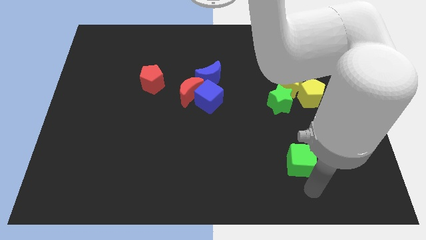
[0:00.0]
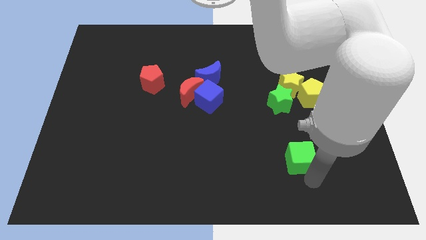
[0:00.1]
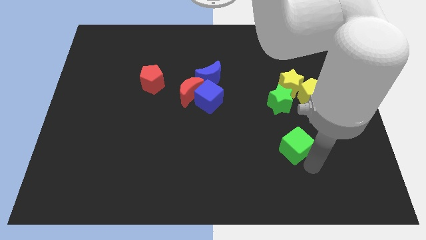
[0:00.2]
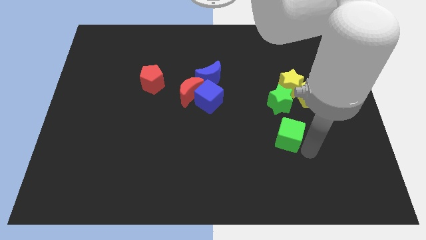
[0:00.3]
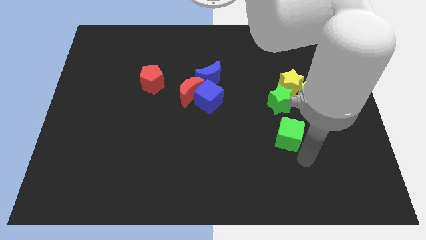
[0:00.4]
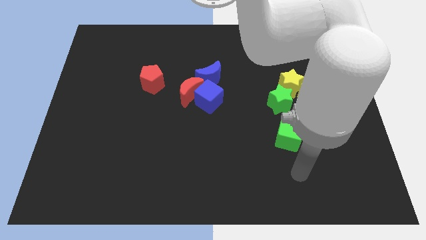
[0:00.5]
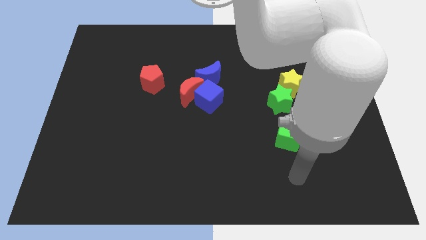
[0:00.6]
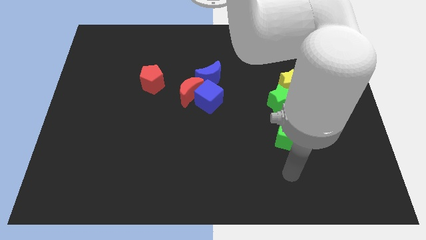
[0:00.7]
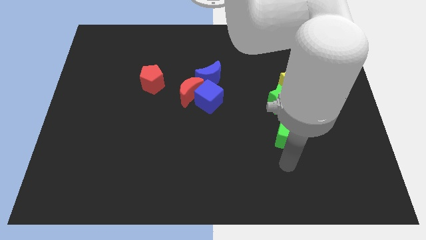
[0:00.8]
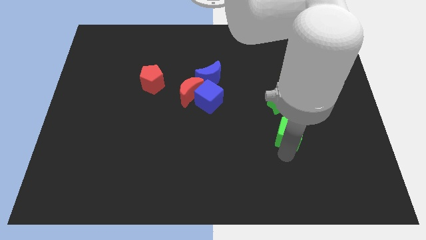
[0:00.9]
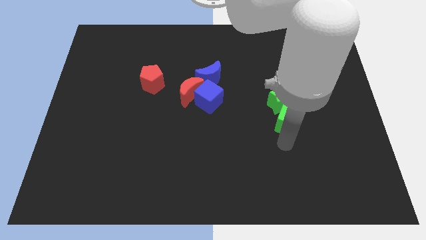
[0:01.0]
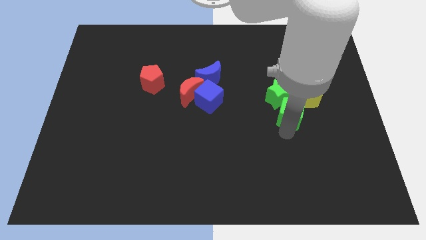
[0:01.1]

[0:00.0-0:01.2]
drag the green cube into the green star

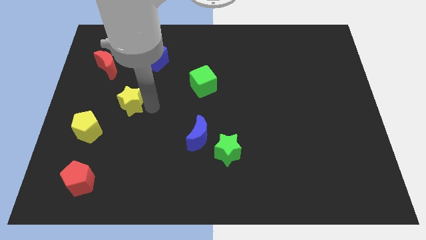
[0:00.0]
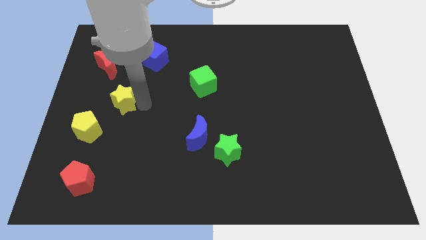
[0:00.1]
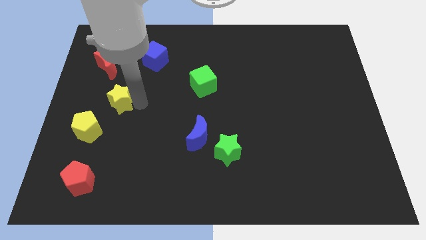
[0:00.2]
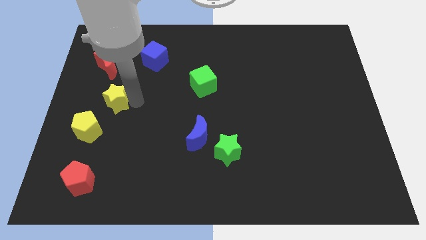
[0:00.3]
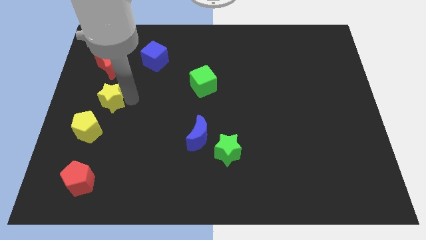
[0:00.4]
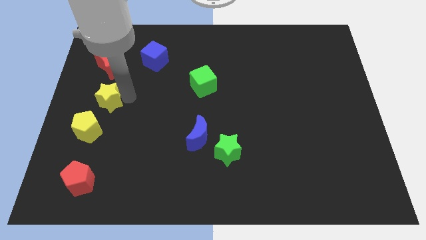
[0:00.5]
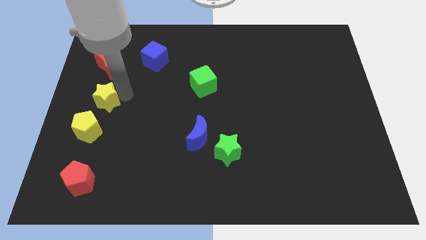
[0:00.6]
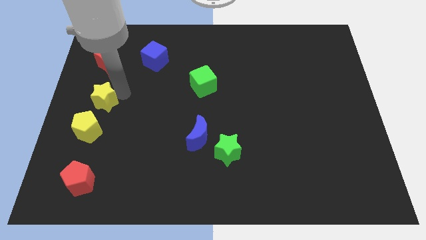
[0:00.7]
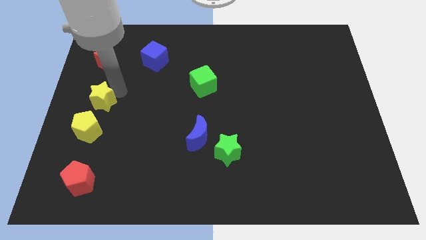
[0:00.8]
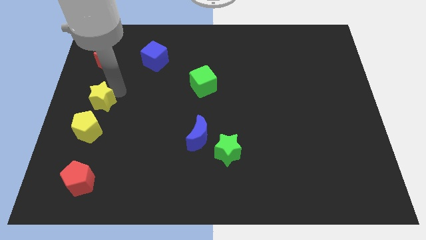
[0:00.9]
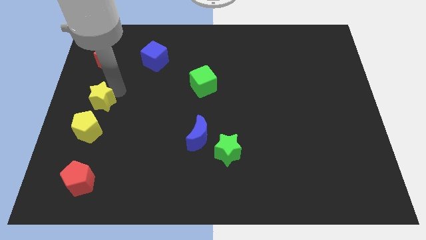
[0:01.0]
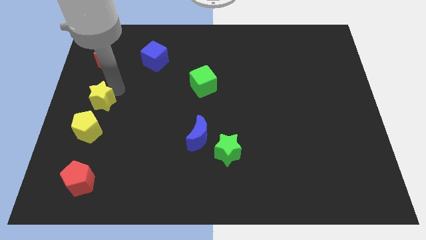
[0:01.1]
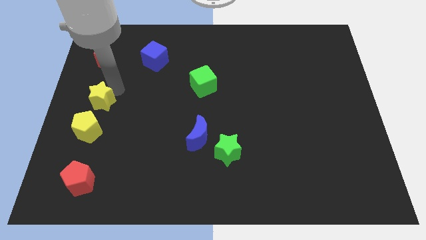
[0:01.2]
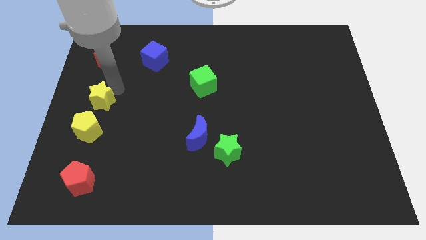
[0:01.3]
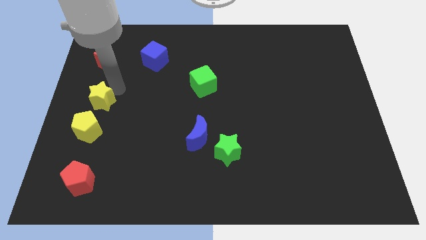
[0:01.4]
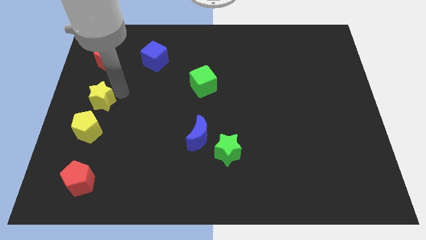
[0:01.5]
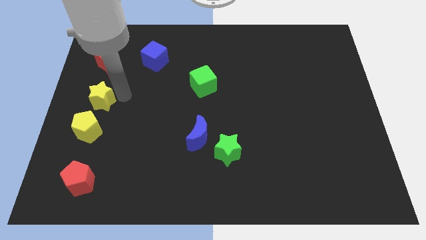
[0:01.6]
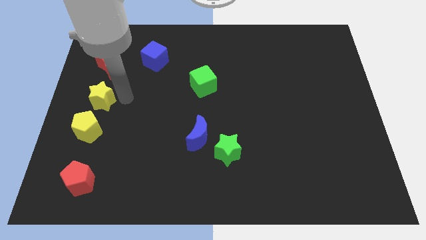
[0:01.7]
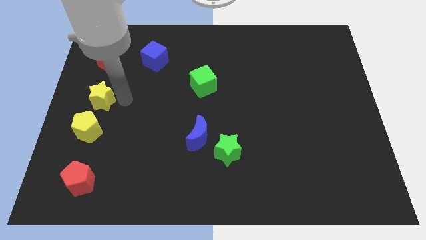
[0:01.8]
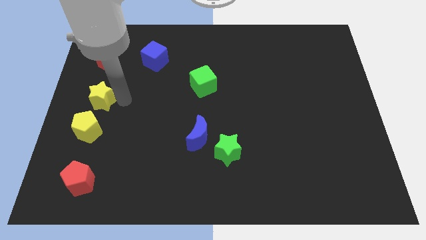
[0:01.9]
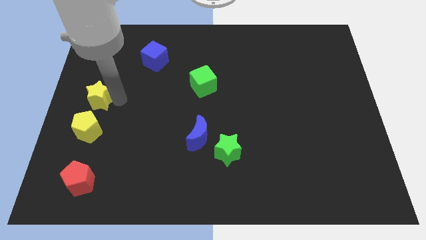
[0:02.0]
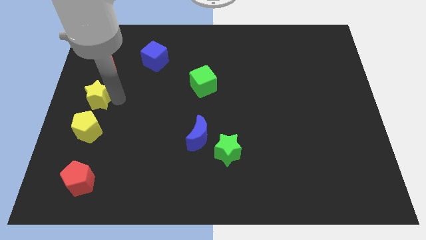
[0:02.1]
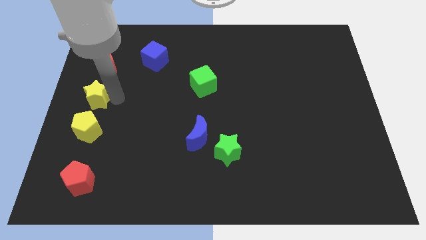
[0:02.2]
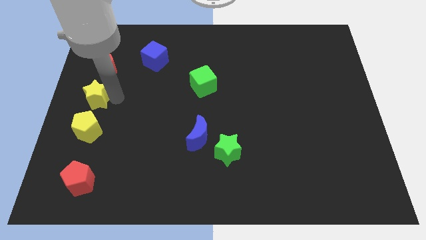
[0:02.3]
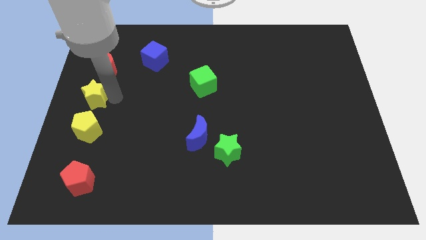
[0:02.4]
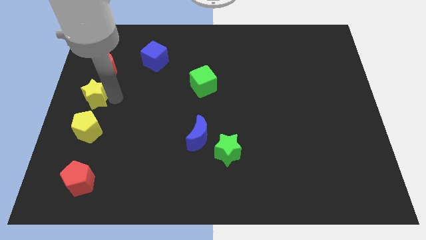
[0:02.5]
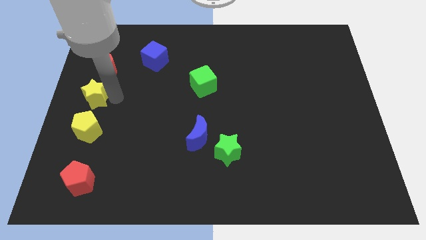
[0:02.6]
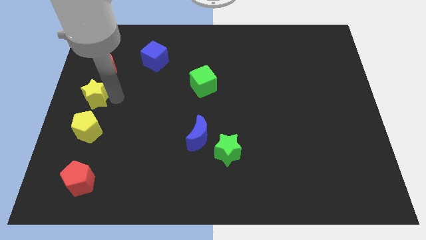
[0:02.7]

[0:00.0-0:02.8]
slide the yellow star in between the red crescent and the yellow pentagon

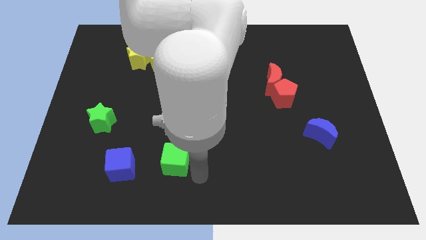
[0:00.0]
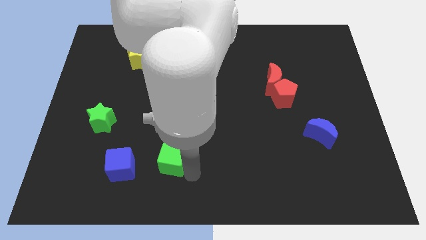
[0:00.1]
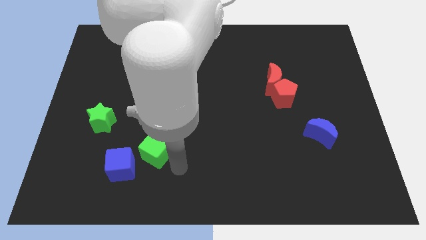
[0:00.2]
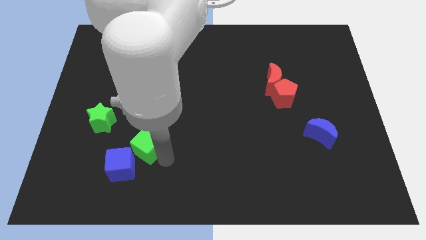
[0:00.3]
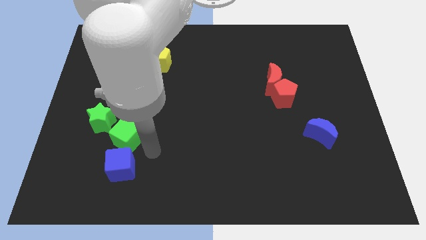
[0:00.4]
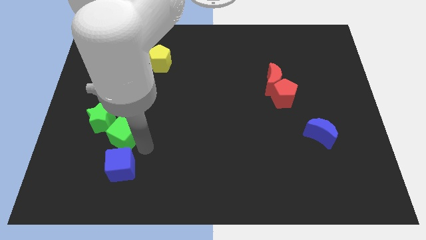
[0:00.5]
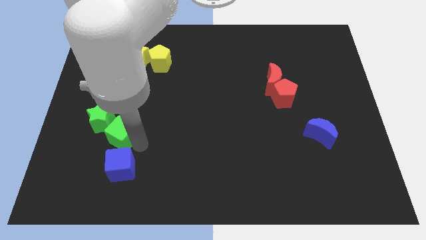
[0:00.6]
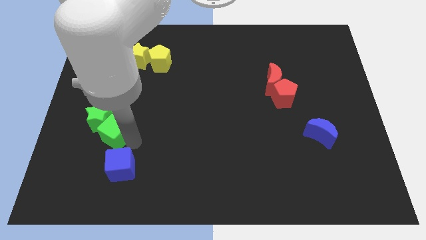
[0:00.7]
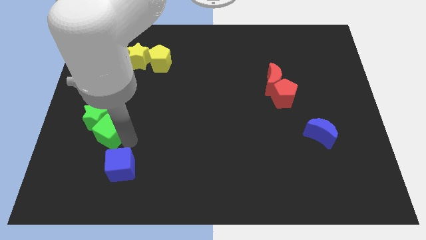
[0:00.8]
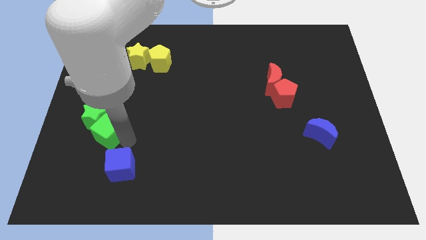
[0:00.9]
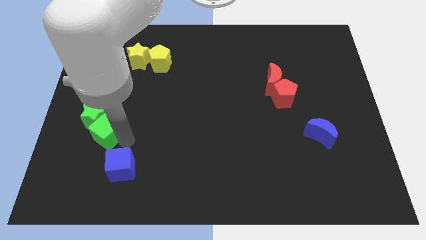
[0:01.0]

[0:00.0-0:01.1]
push the green cube to the bottom right of the green star

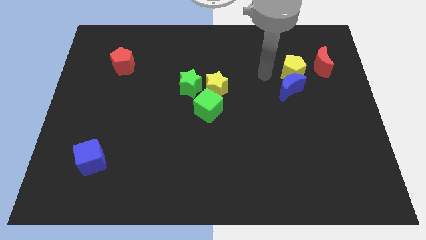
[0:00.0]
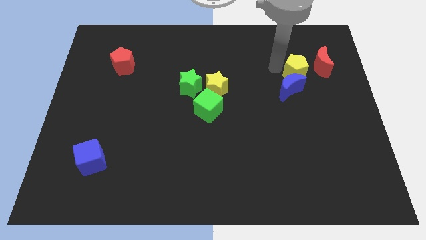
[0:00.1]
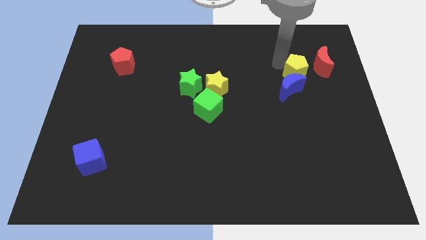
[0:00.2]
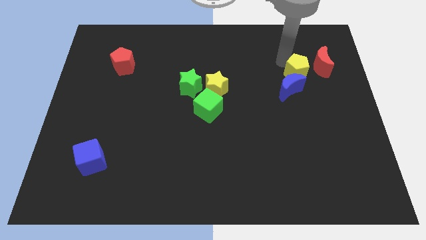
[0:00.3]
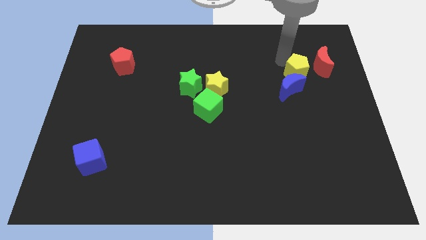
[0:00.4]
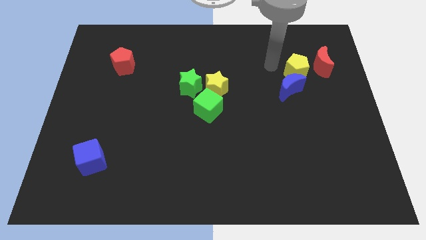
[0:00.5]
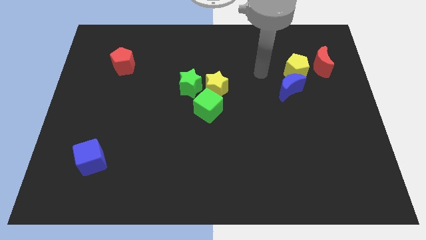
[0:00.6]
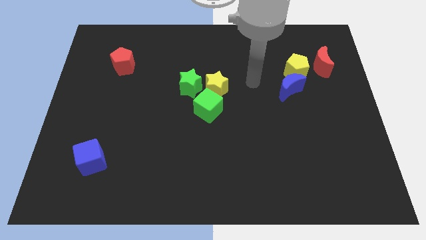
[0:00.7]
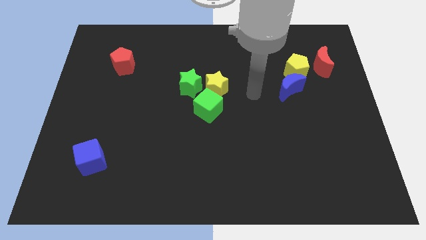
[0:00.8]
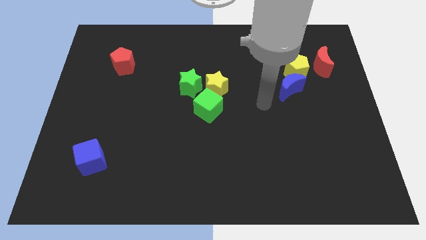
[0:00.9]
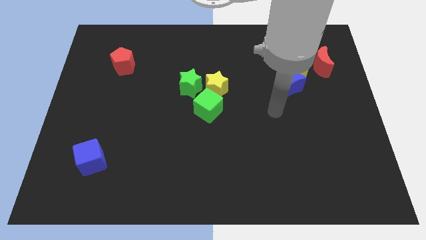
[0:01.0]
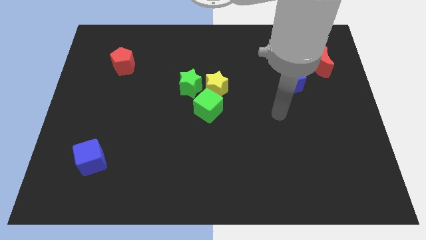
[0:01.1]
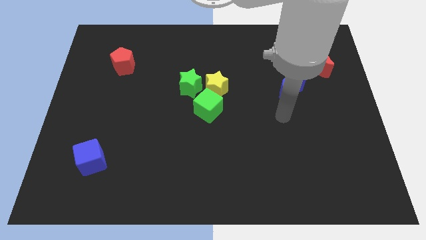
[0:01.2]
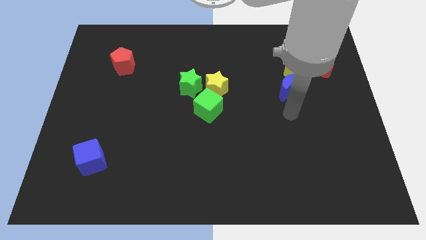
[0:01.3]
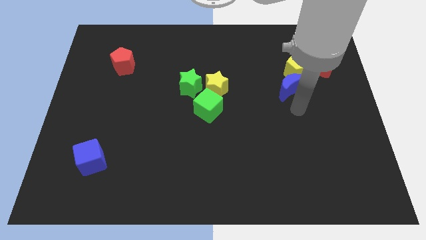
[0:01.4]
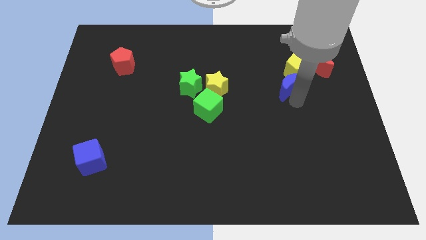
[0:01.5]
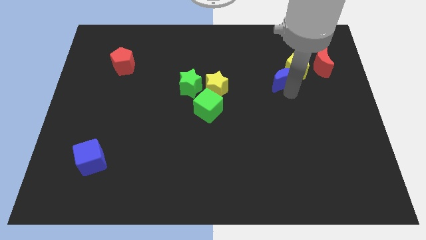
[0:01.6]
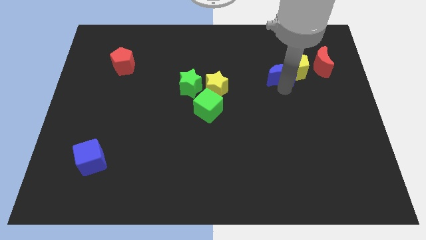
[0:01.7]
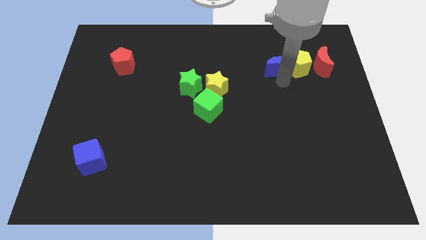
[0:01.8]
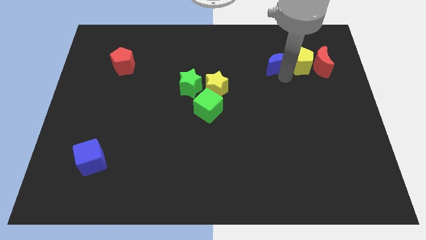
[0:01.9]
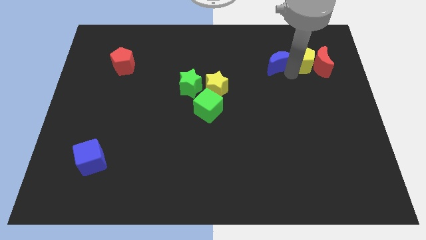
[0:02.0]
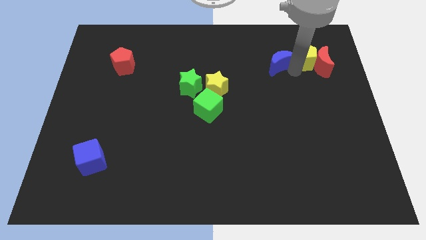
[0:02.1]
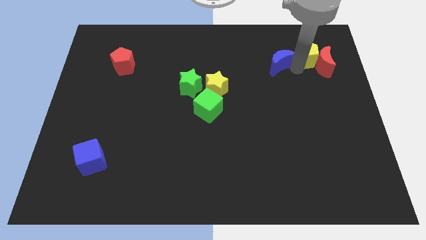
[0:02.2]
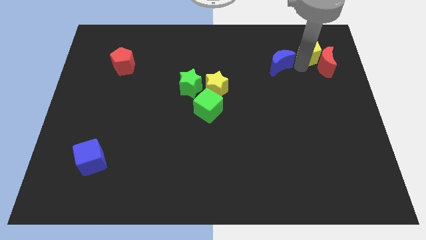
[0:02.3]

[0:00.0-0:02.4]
move the blue moon left to the yellow pentagon

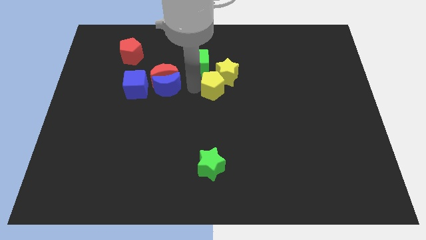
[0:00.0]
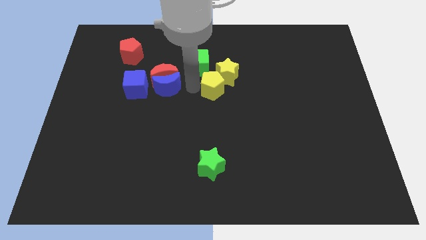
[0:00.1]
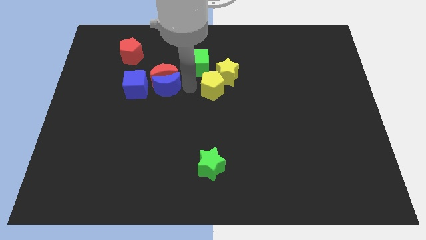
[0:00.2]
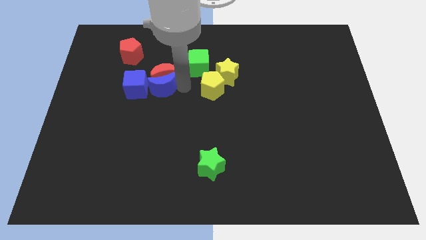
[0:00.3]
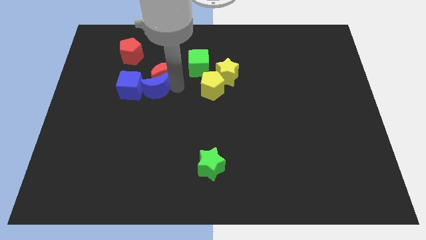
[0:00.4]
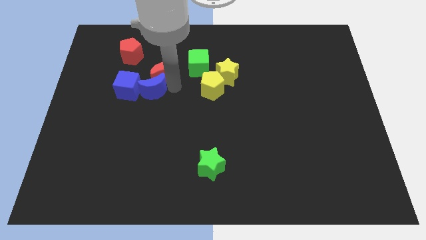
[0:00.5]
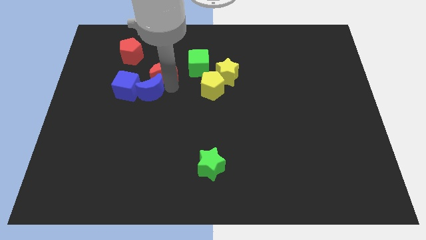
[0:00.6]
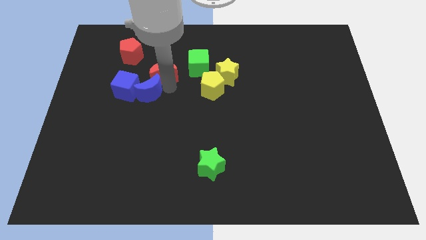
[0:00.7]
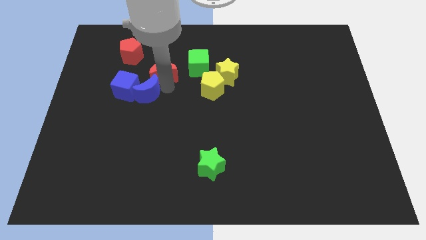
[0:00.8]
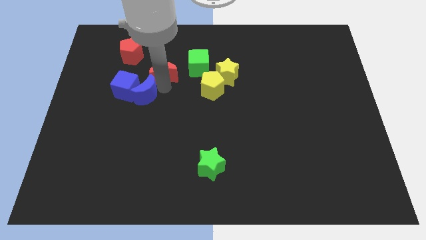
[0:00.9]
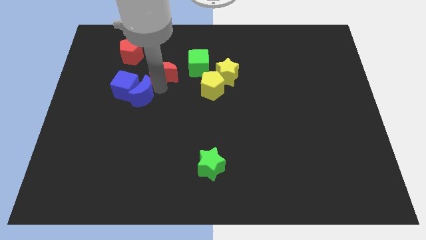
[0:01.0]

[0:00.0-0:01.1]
move the blue moon into the blue cube

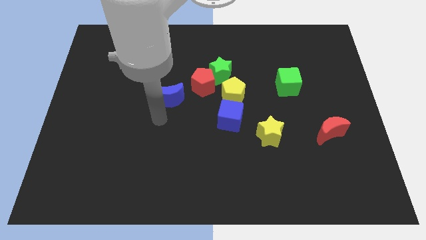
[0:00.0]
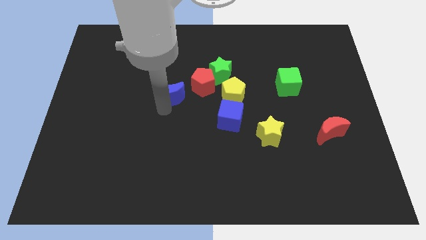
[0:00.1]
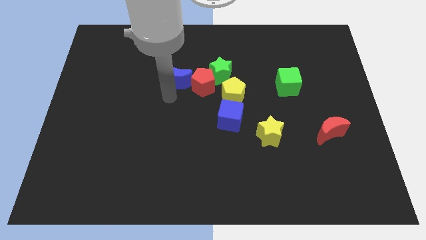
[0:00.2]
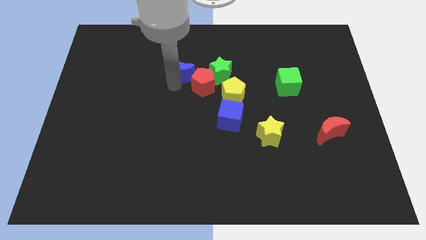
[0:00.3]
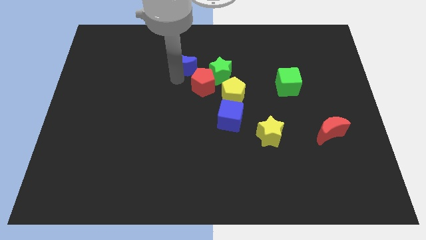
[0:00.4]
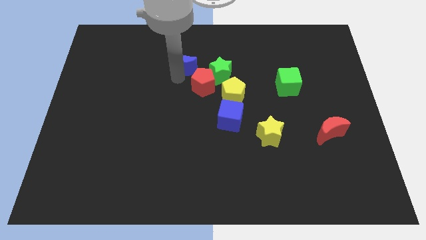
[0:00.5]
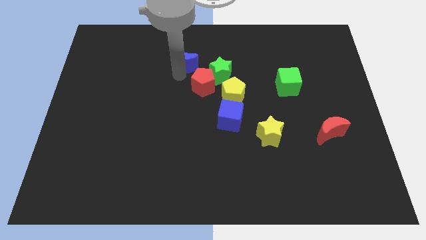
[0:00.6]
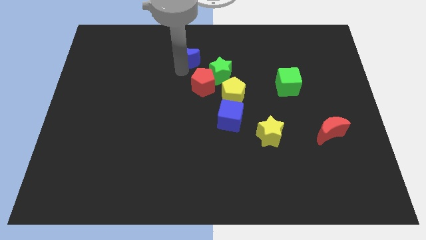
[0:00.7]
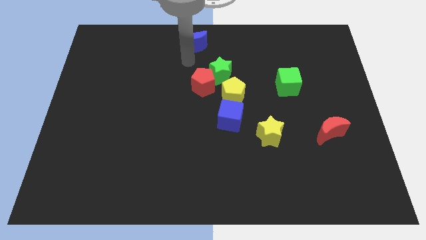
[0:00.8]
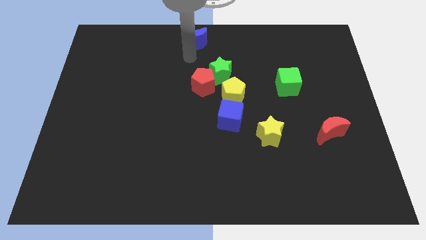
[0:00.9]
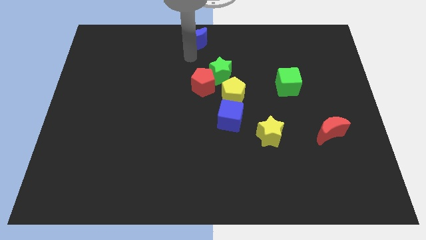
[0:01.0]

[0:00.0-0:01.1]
push the blue moon to the top center of the board
